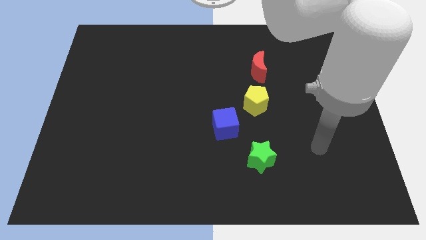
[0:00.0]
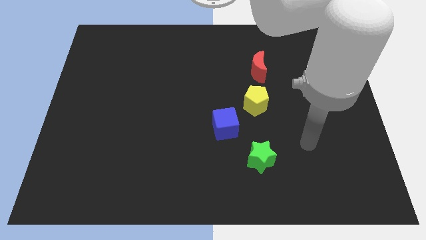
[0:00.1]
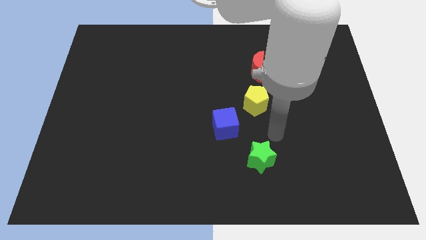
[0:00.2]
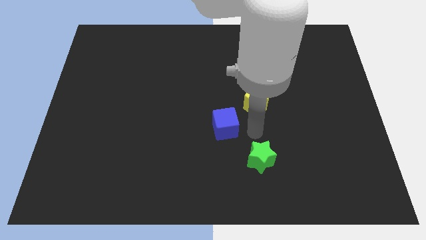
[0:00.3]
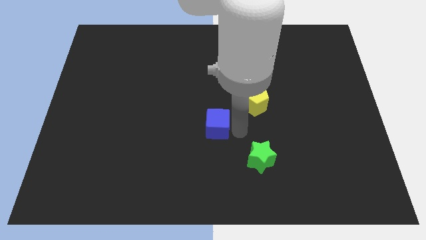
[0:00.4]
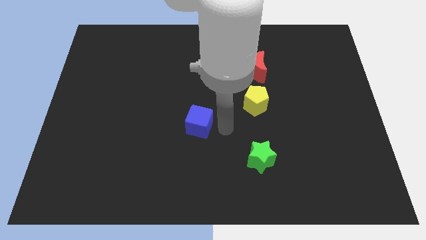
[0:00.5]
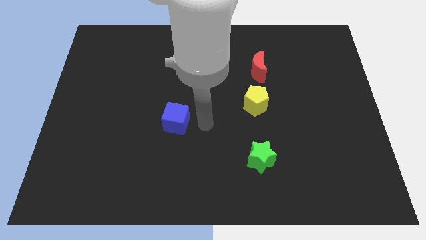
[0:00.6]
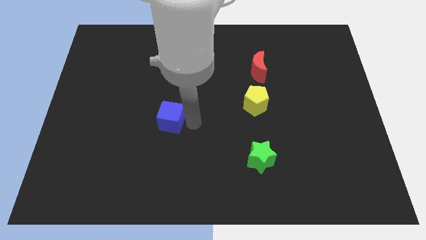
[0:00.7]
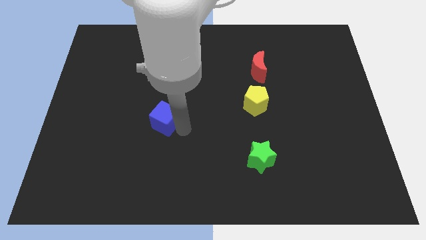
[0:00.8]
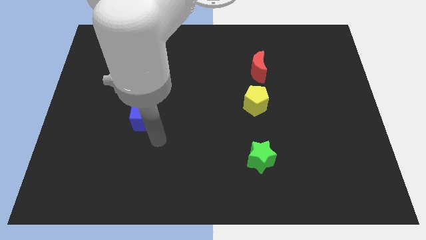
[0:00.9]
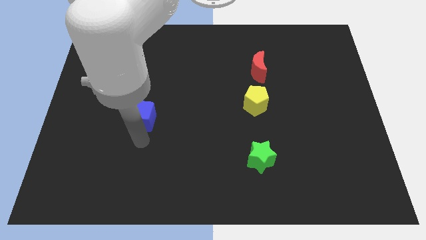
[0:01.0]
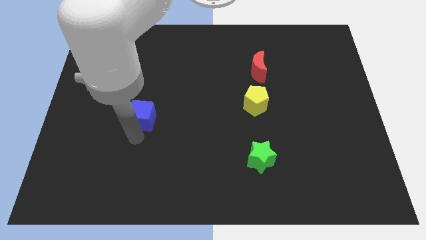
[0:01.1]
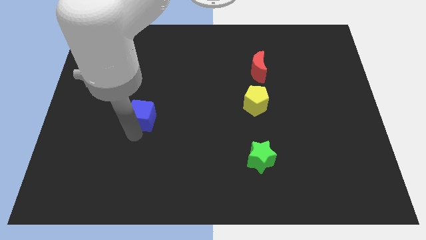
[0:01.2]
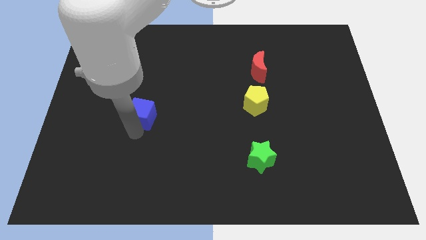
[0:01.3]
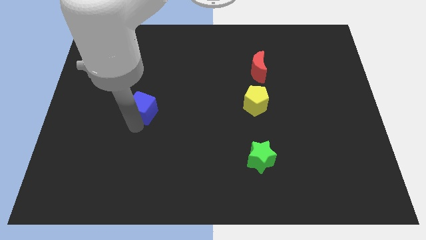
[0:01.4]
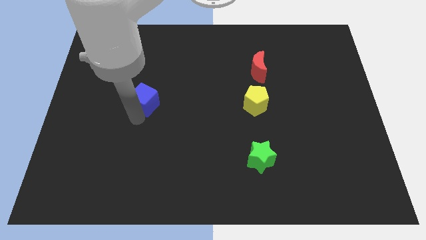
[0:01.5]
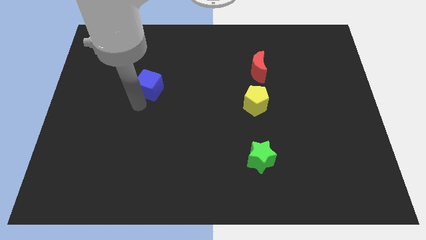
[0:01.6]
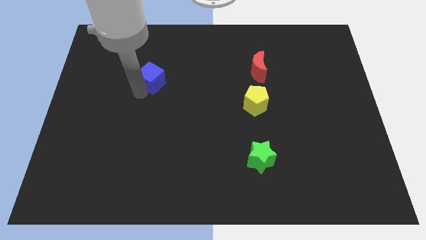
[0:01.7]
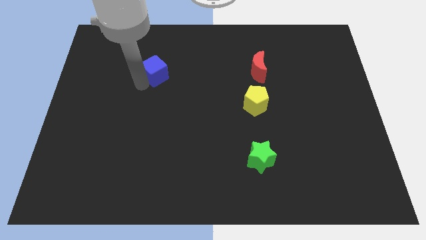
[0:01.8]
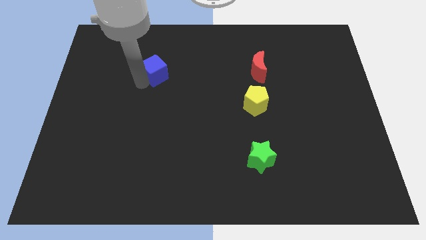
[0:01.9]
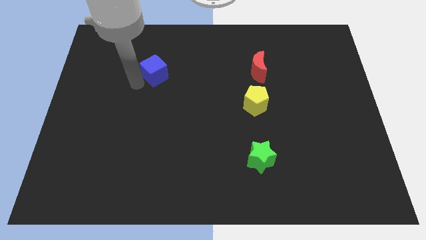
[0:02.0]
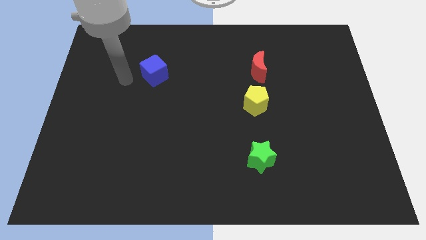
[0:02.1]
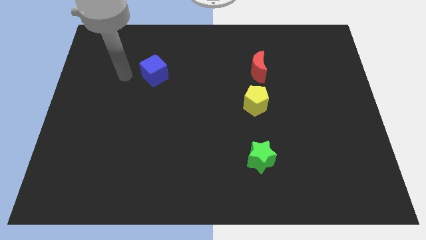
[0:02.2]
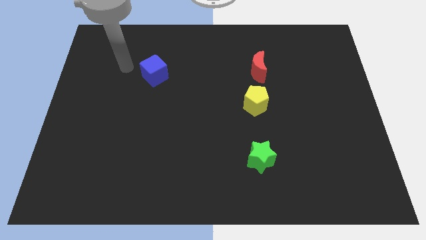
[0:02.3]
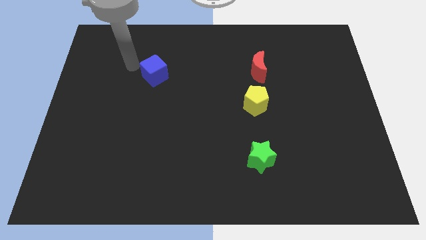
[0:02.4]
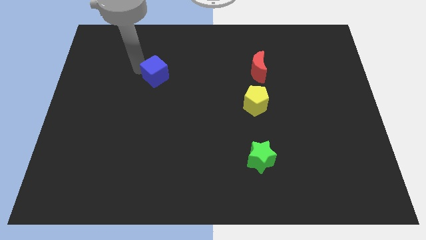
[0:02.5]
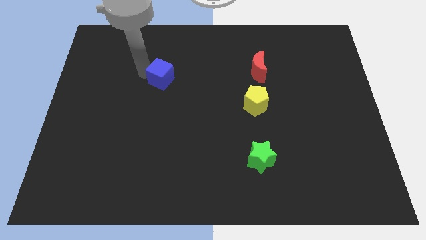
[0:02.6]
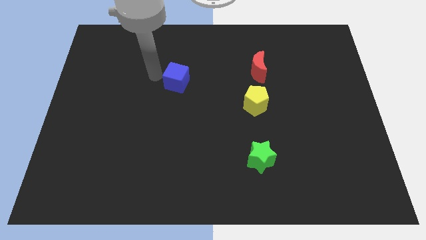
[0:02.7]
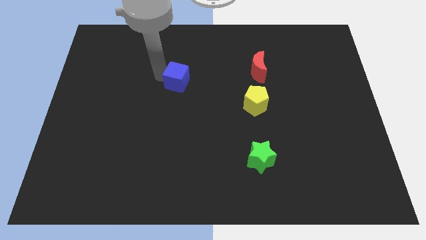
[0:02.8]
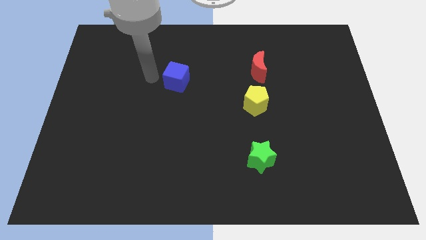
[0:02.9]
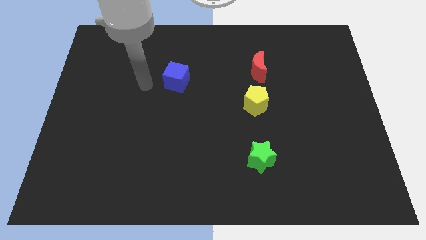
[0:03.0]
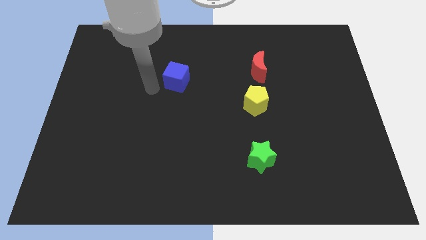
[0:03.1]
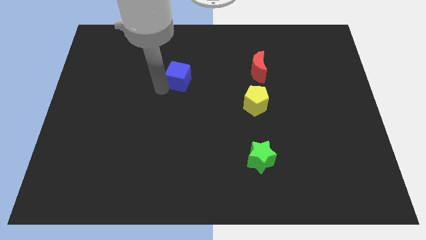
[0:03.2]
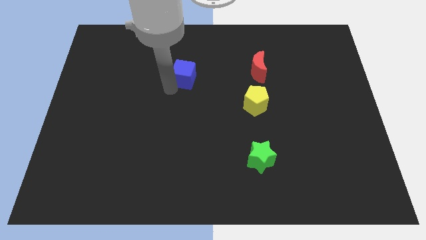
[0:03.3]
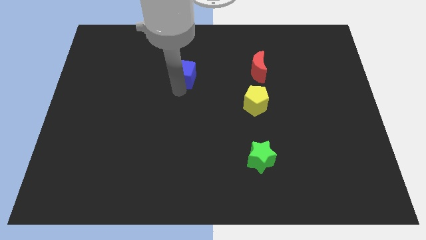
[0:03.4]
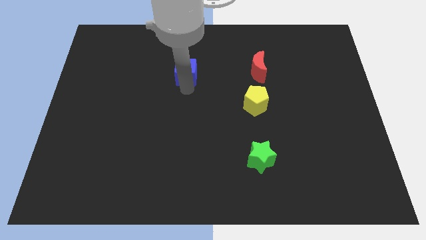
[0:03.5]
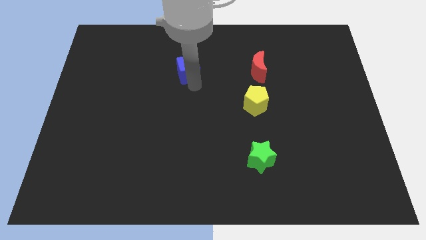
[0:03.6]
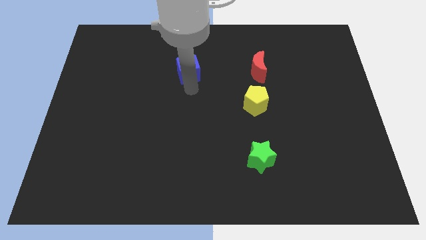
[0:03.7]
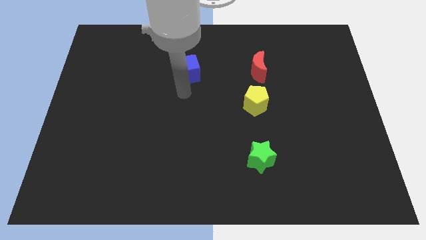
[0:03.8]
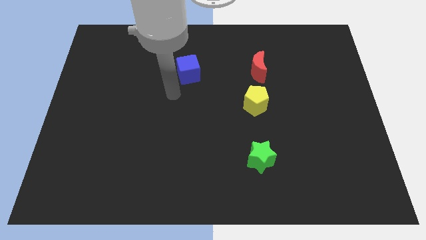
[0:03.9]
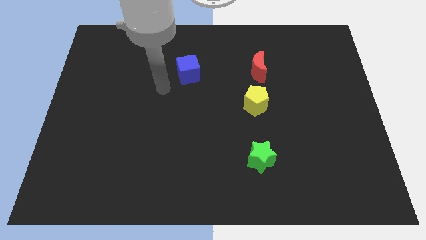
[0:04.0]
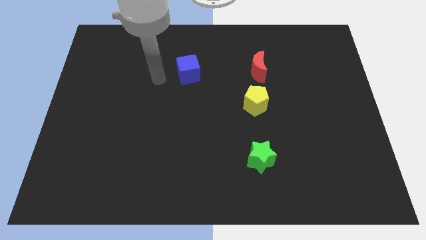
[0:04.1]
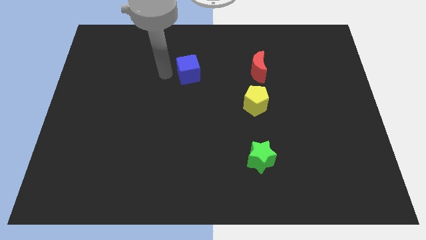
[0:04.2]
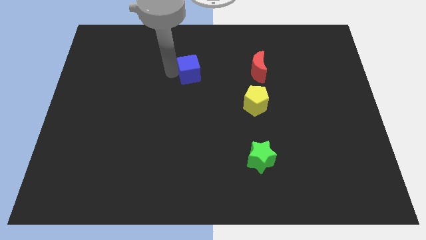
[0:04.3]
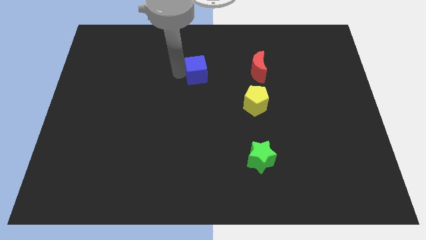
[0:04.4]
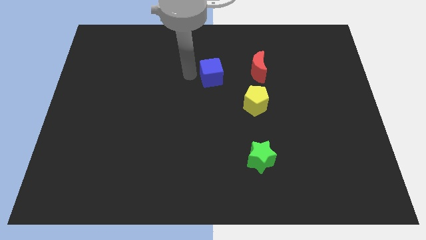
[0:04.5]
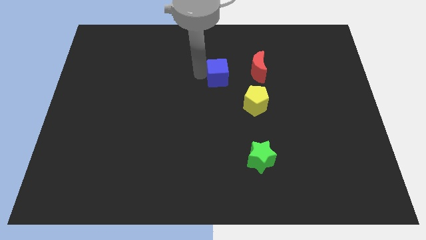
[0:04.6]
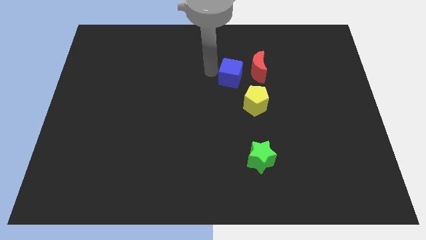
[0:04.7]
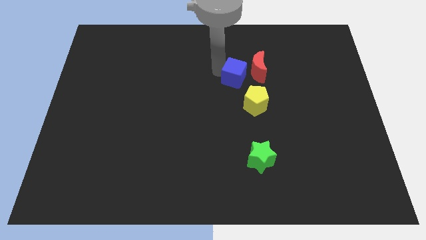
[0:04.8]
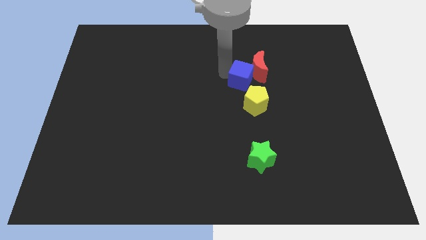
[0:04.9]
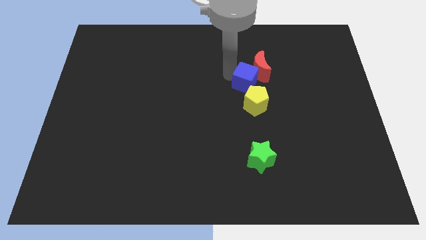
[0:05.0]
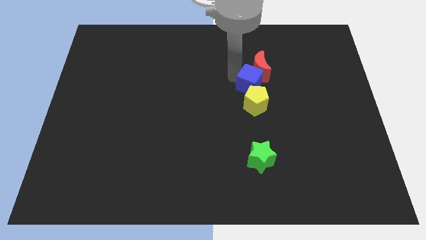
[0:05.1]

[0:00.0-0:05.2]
move the blue block to the red moon

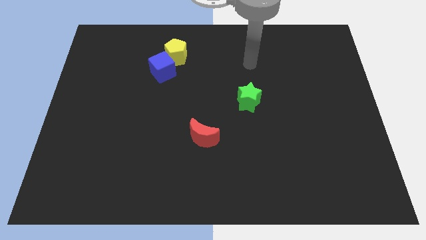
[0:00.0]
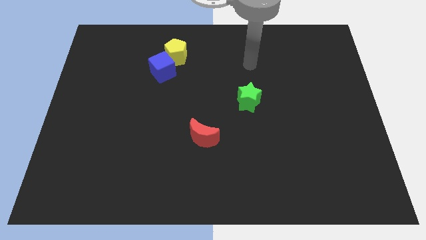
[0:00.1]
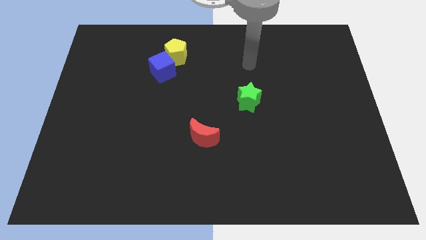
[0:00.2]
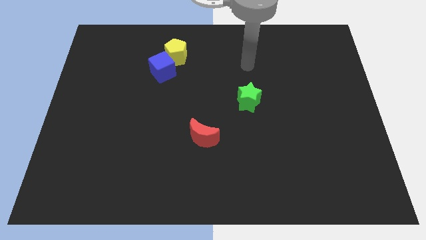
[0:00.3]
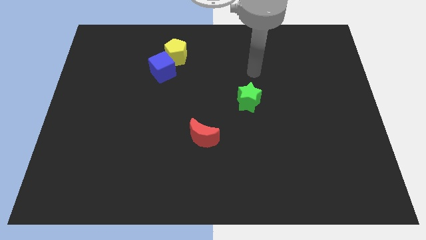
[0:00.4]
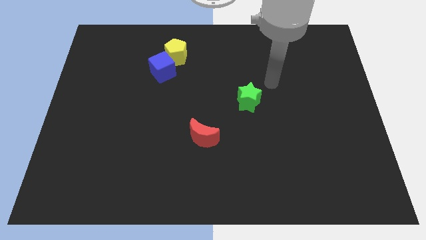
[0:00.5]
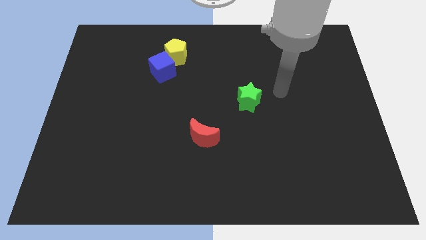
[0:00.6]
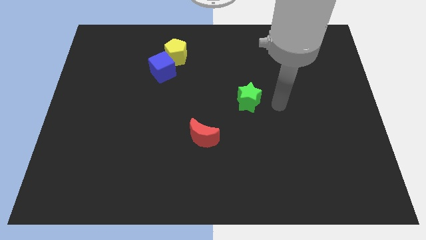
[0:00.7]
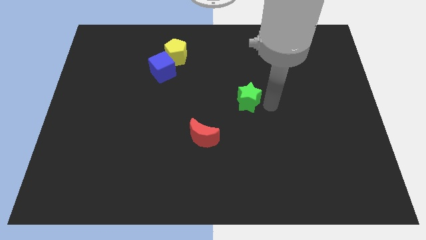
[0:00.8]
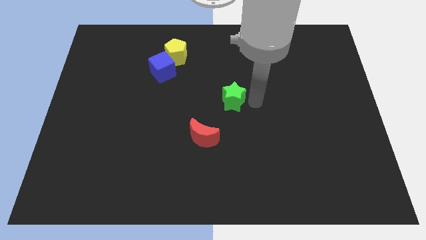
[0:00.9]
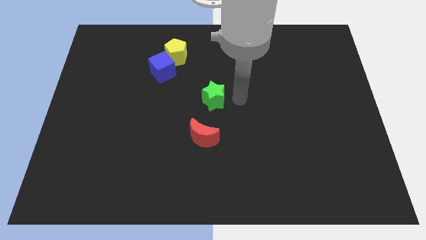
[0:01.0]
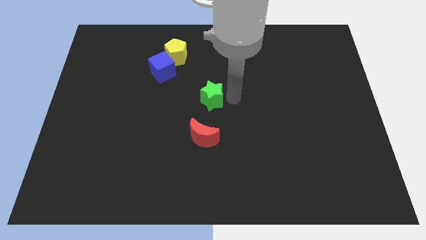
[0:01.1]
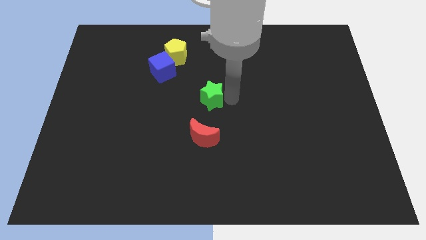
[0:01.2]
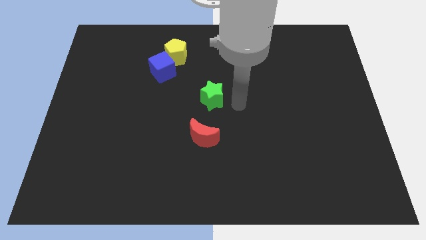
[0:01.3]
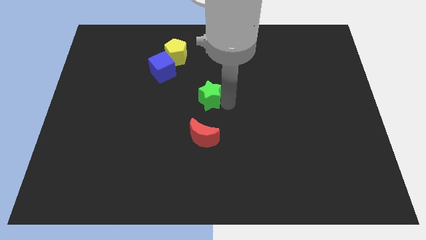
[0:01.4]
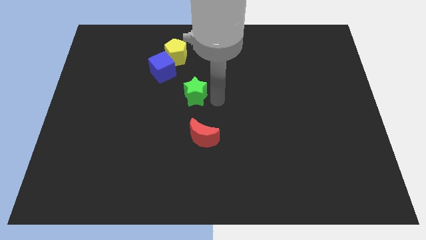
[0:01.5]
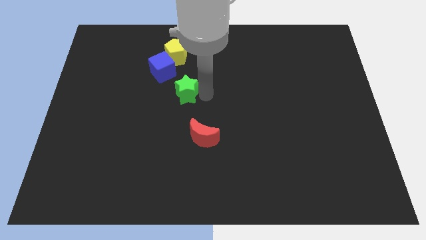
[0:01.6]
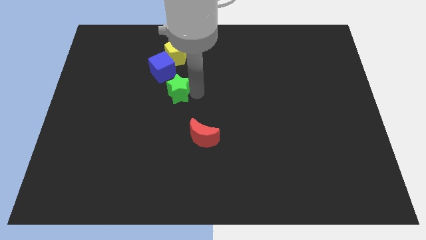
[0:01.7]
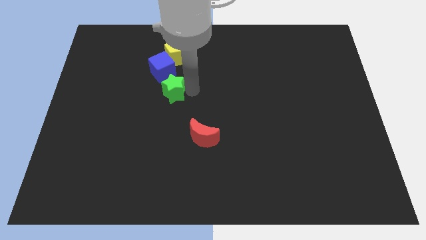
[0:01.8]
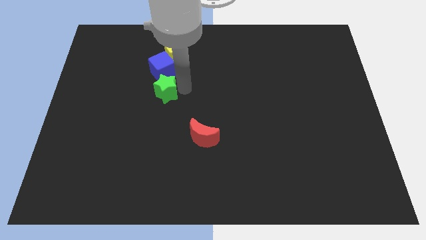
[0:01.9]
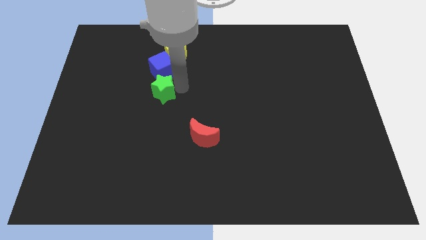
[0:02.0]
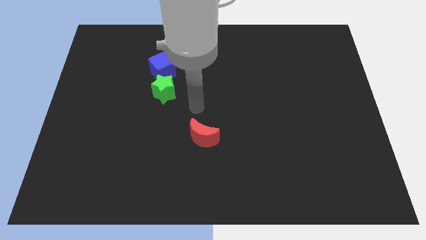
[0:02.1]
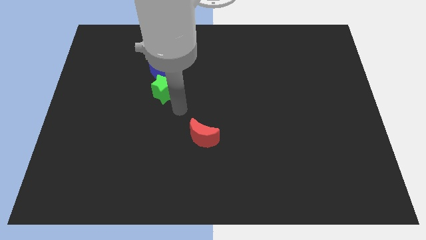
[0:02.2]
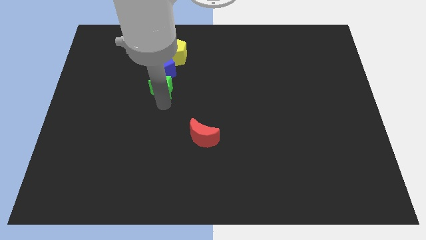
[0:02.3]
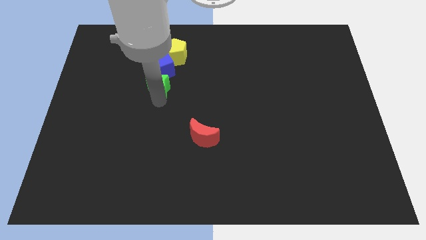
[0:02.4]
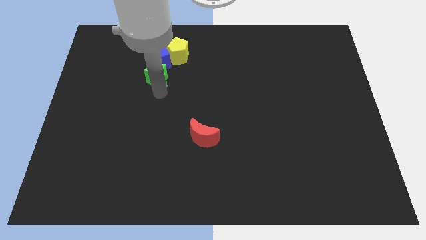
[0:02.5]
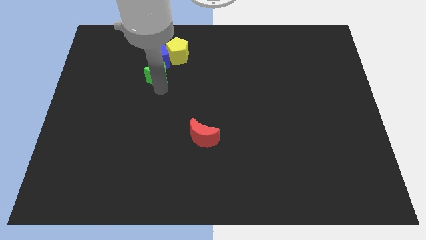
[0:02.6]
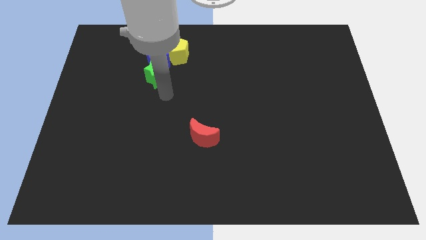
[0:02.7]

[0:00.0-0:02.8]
slide the star close to the blue cube

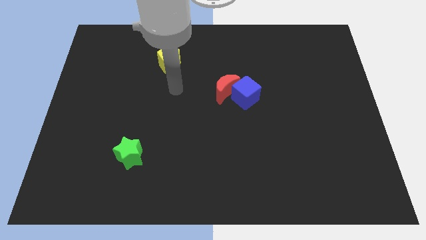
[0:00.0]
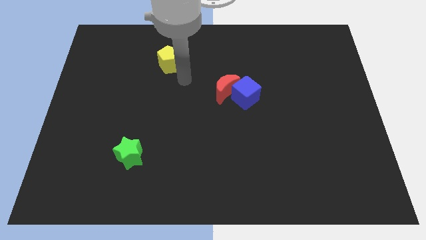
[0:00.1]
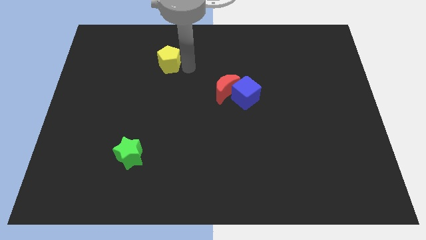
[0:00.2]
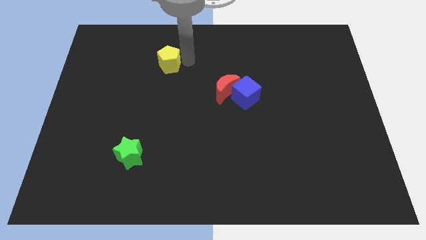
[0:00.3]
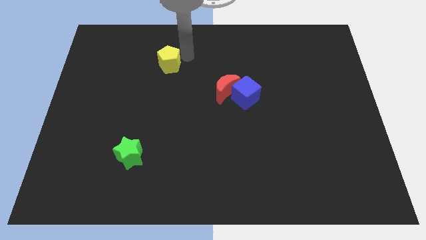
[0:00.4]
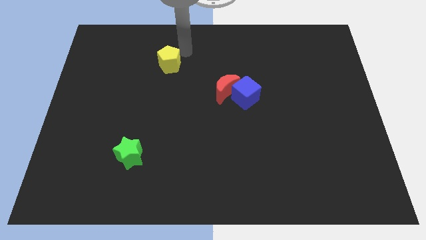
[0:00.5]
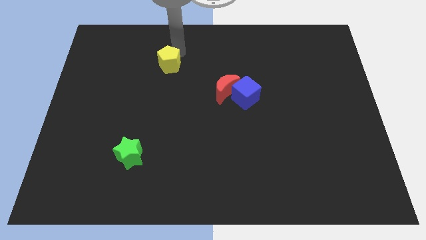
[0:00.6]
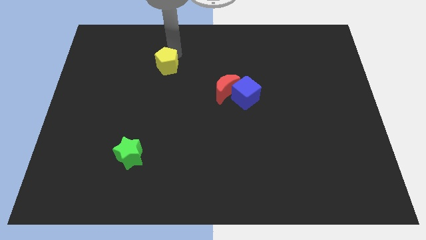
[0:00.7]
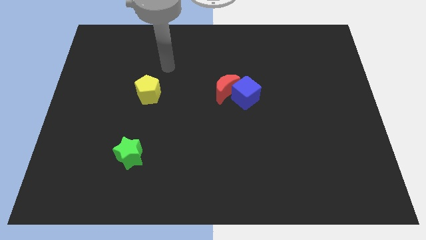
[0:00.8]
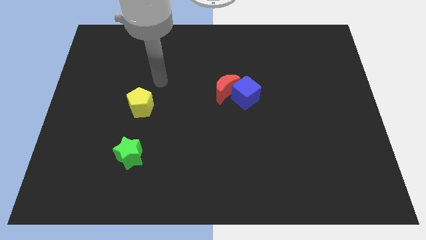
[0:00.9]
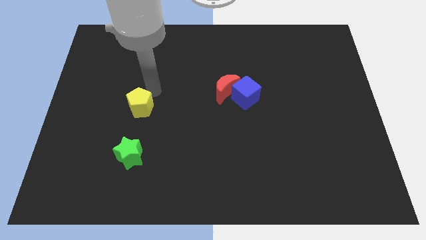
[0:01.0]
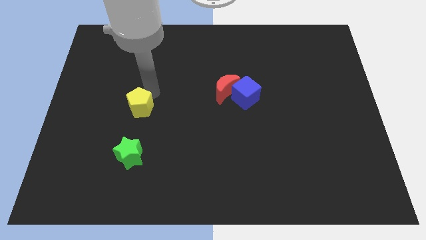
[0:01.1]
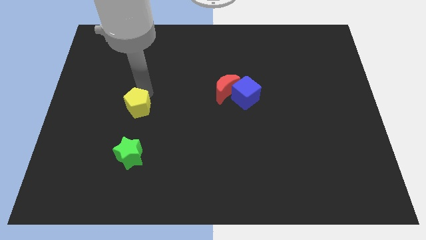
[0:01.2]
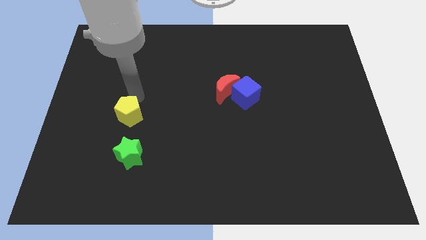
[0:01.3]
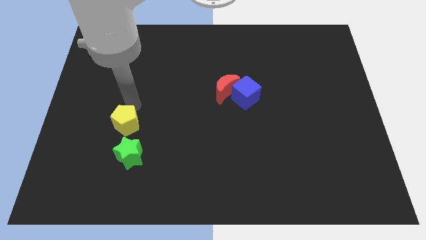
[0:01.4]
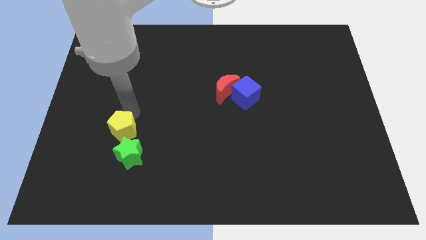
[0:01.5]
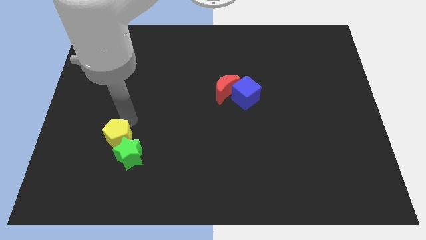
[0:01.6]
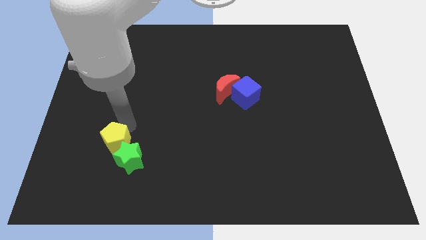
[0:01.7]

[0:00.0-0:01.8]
move the yellow pentagon close to the star
